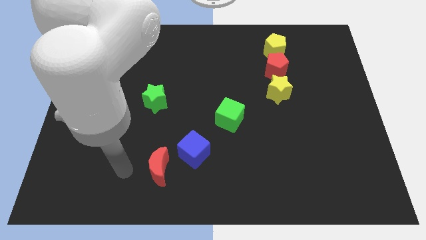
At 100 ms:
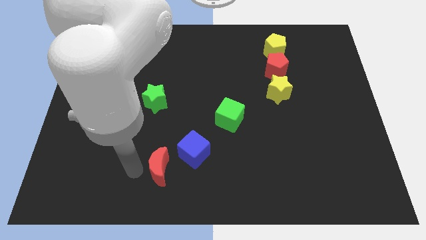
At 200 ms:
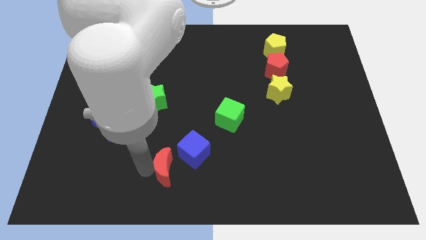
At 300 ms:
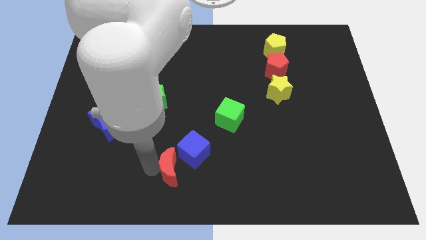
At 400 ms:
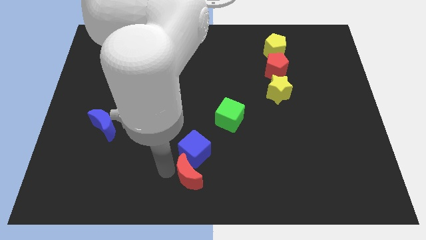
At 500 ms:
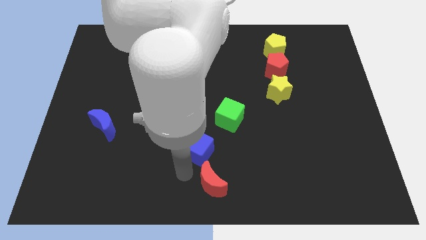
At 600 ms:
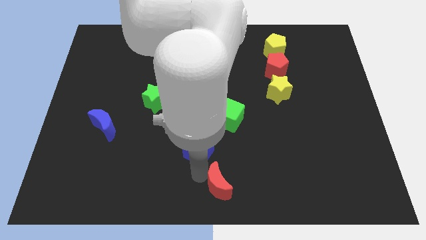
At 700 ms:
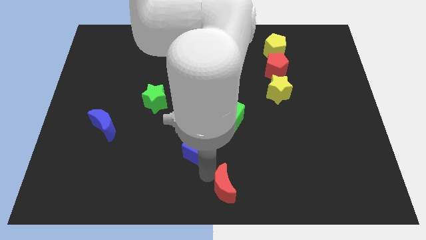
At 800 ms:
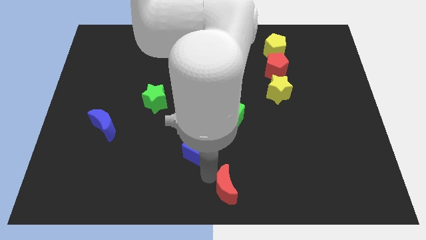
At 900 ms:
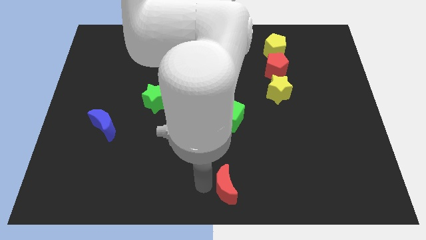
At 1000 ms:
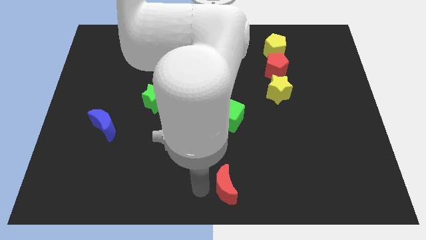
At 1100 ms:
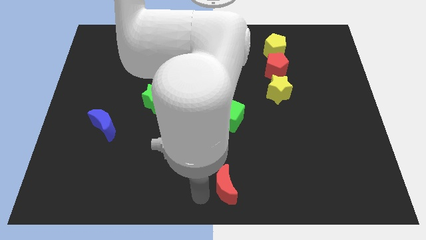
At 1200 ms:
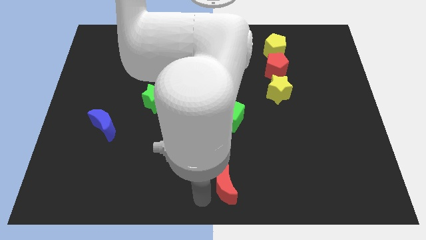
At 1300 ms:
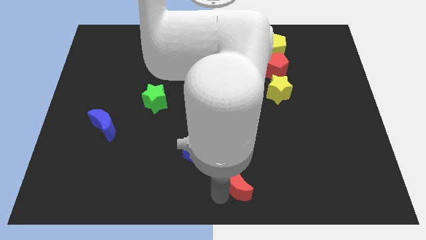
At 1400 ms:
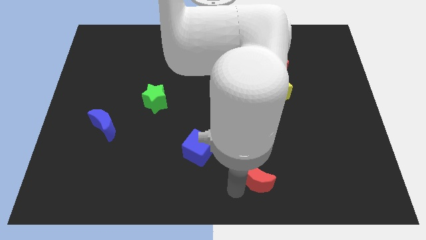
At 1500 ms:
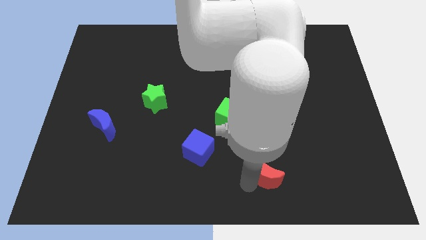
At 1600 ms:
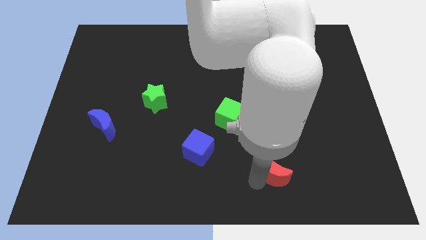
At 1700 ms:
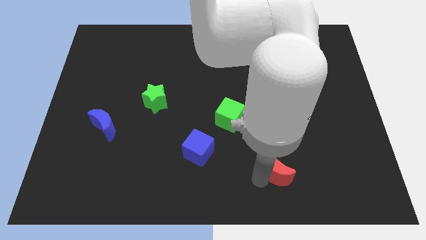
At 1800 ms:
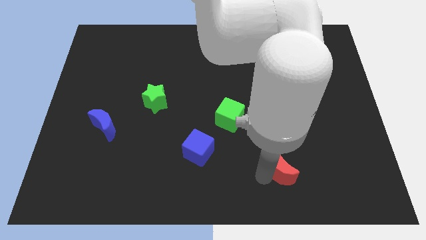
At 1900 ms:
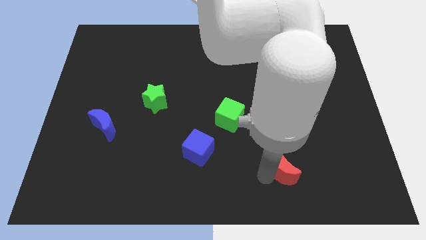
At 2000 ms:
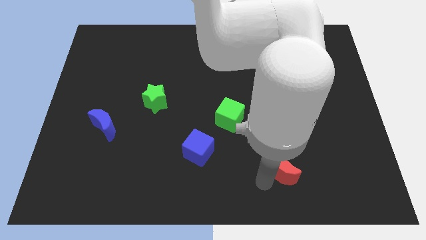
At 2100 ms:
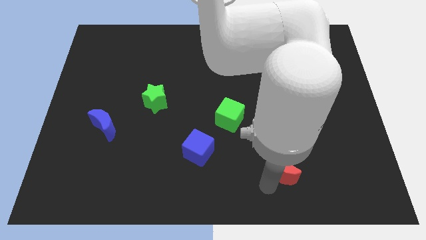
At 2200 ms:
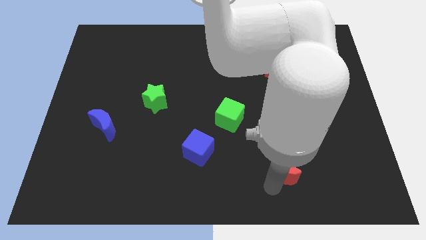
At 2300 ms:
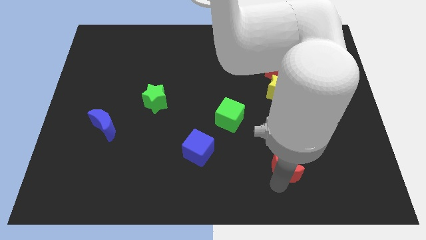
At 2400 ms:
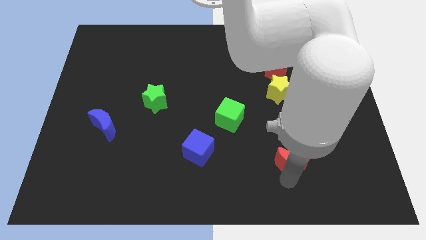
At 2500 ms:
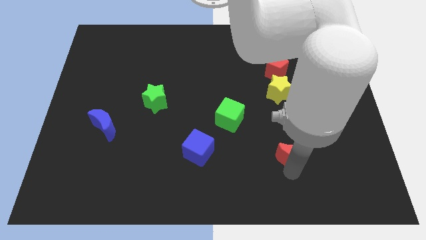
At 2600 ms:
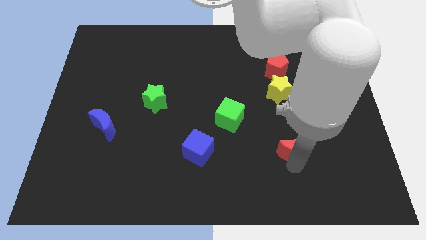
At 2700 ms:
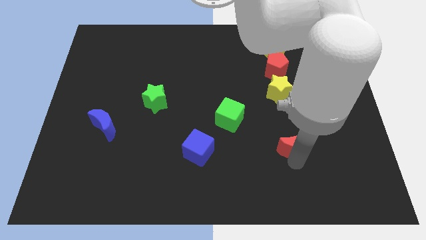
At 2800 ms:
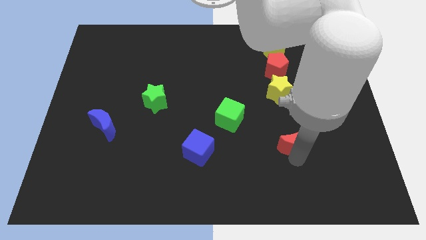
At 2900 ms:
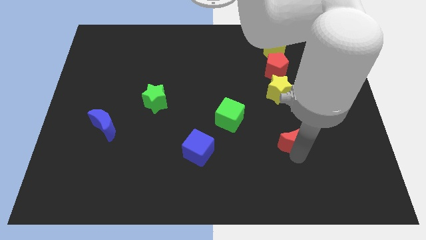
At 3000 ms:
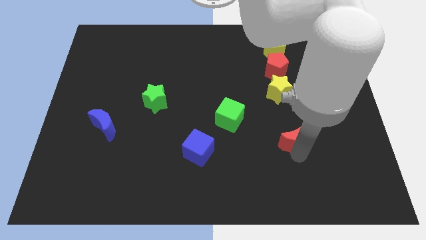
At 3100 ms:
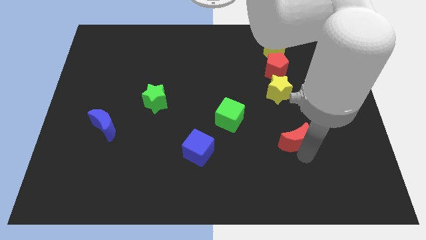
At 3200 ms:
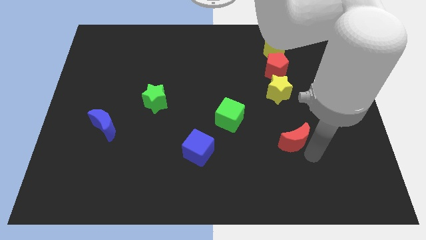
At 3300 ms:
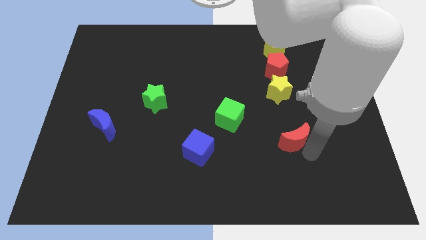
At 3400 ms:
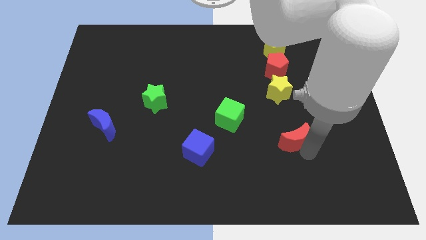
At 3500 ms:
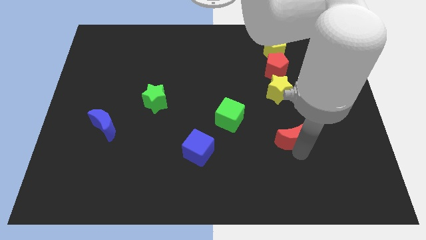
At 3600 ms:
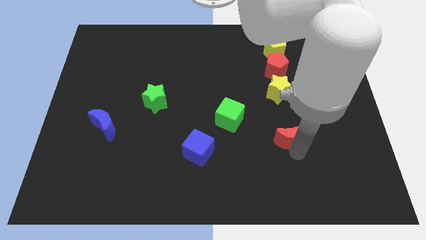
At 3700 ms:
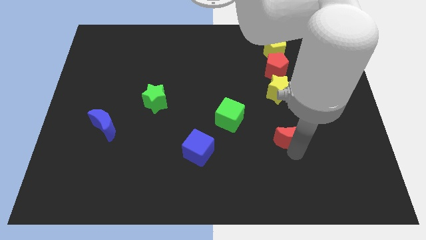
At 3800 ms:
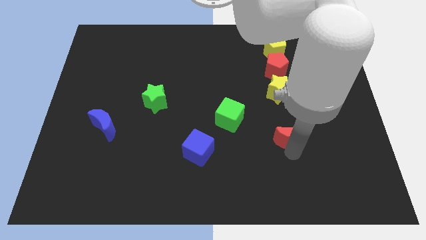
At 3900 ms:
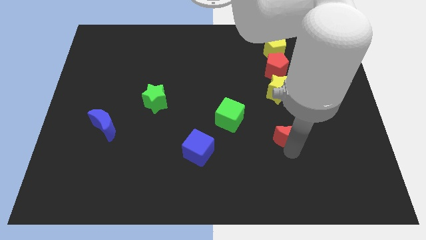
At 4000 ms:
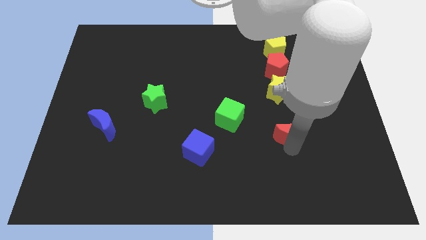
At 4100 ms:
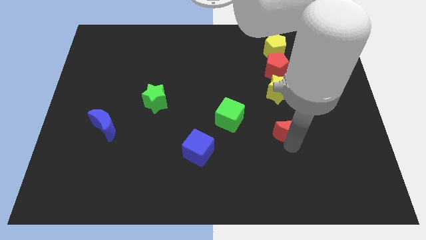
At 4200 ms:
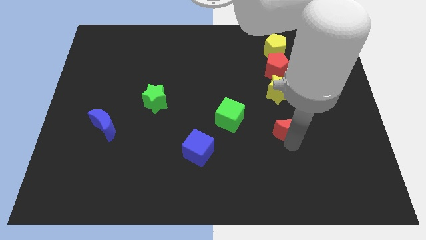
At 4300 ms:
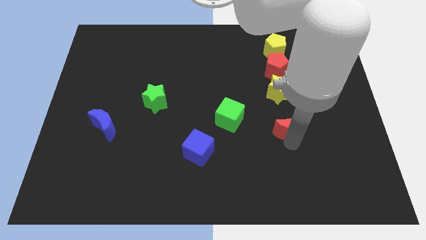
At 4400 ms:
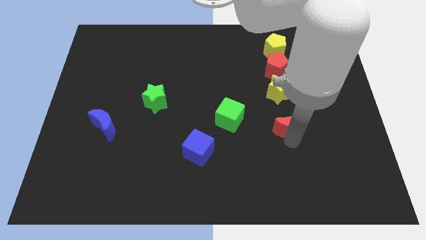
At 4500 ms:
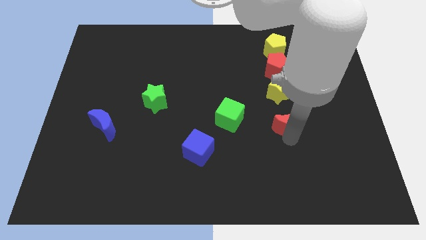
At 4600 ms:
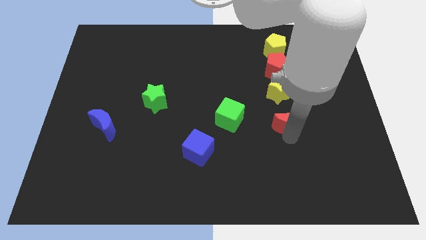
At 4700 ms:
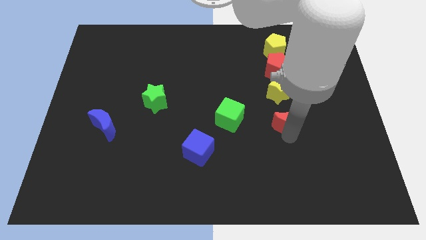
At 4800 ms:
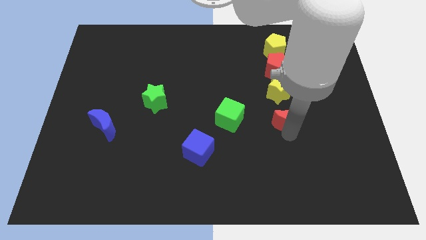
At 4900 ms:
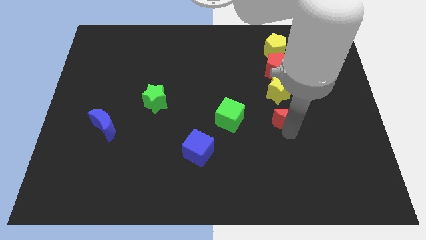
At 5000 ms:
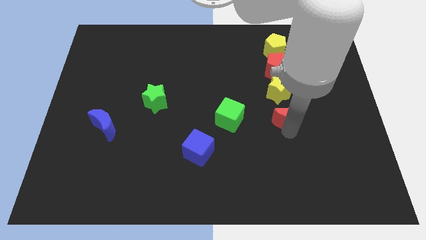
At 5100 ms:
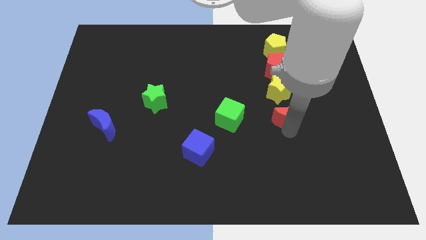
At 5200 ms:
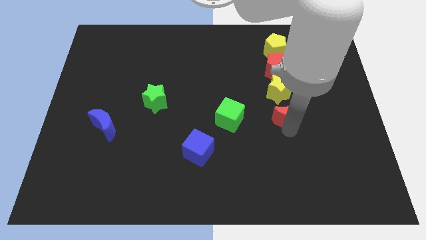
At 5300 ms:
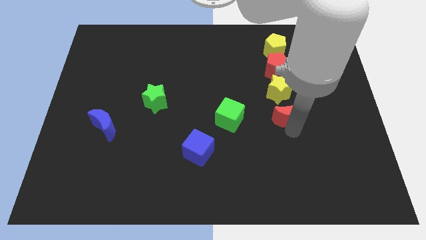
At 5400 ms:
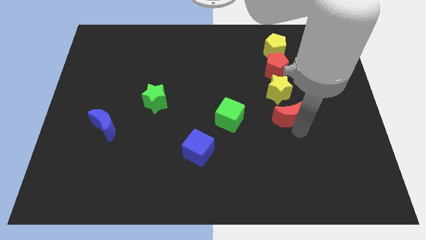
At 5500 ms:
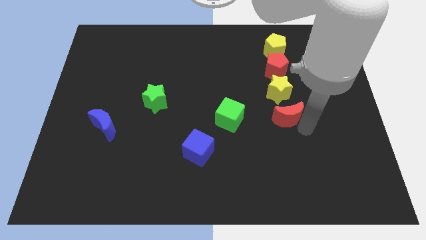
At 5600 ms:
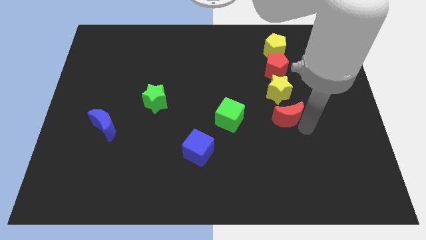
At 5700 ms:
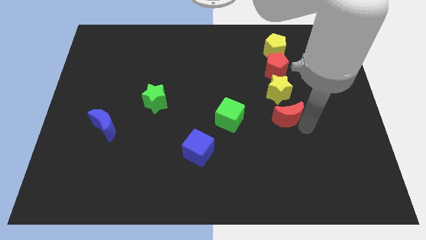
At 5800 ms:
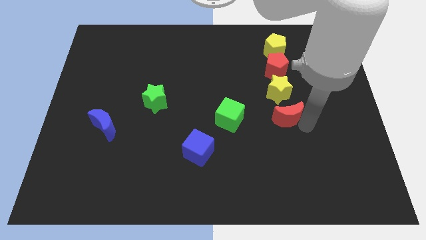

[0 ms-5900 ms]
move the red moon to the bottom of yellow star

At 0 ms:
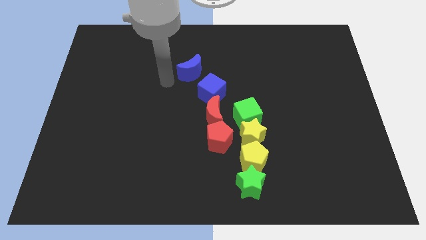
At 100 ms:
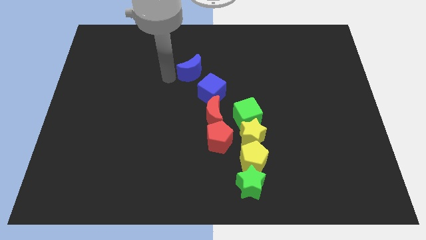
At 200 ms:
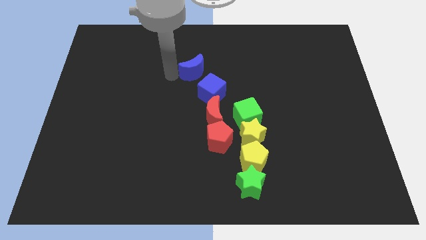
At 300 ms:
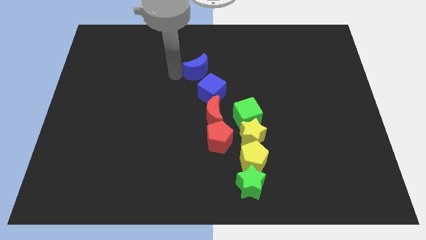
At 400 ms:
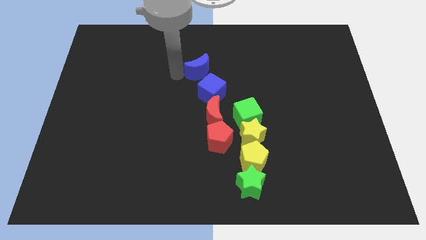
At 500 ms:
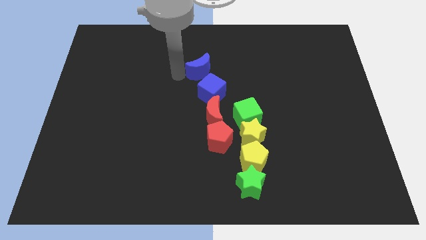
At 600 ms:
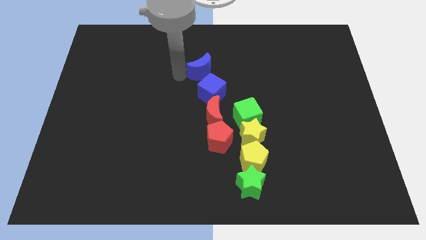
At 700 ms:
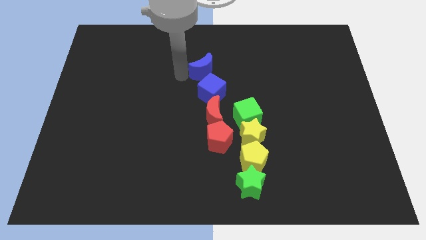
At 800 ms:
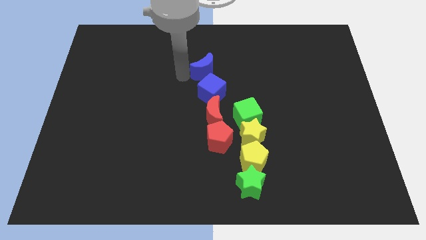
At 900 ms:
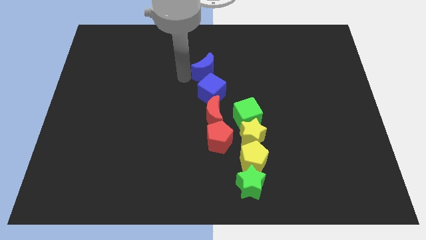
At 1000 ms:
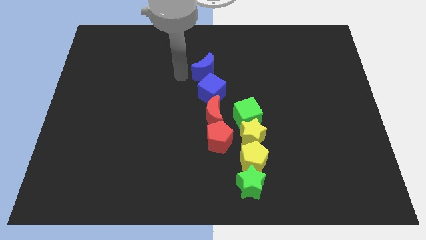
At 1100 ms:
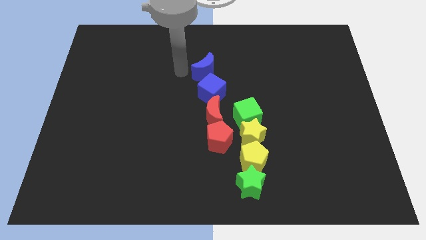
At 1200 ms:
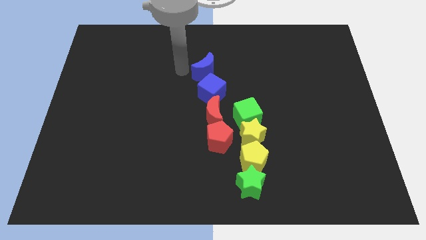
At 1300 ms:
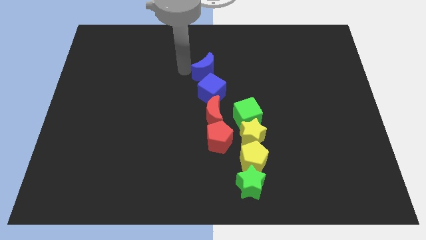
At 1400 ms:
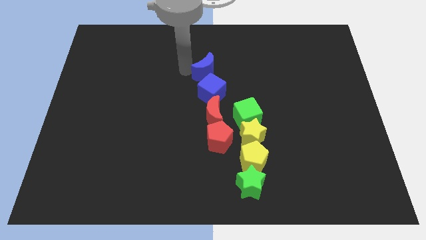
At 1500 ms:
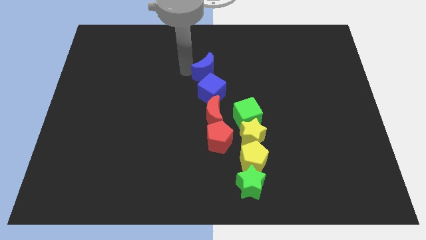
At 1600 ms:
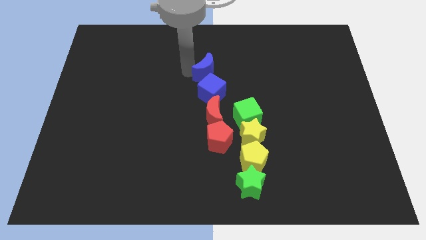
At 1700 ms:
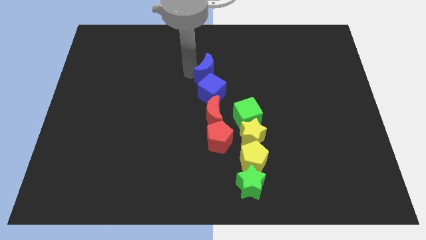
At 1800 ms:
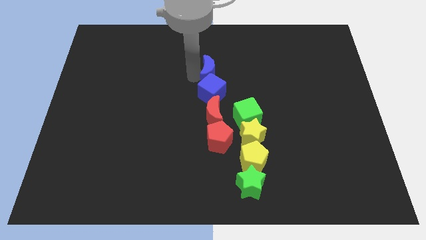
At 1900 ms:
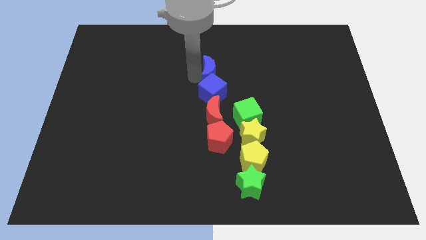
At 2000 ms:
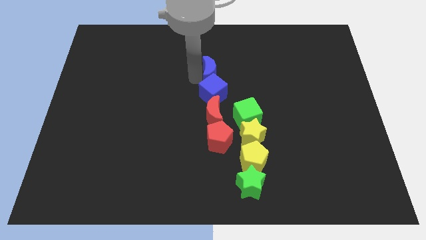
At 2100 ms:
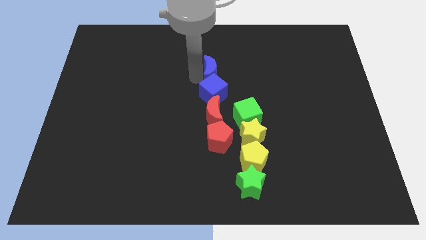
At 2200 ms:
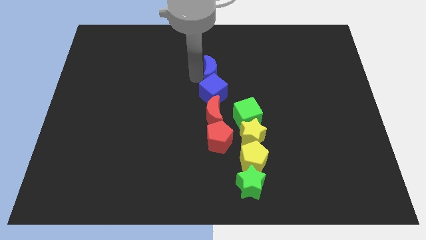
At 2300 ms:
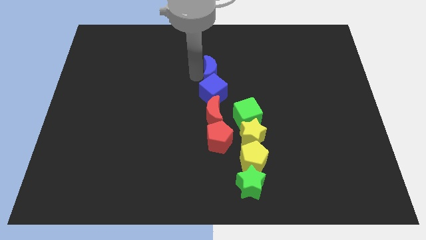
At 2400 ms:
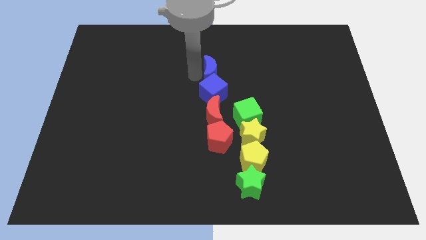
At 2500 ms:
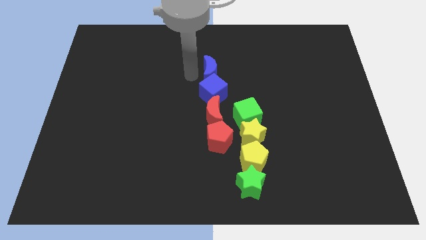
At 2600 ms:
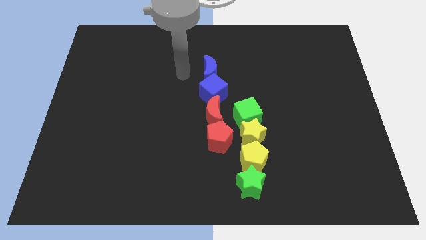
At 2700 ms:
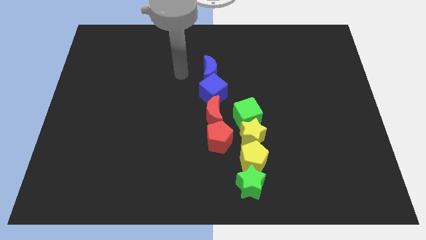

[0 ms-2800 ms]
place blue crescent above blue cube

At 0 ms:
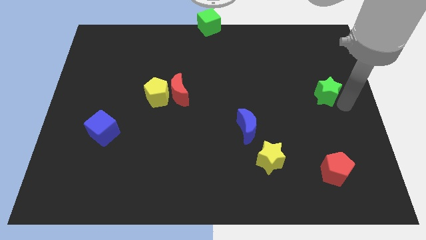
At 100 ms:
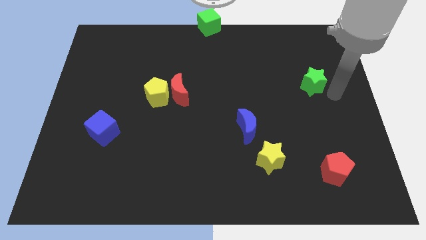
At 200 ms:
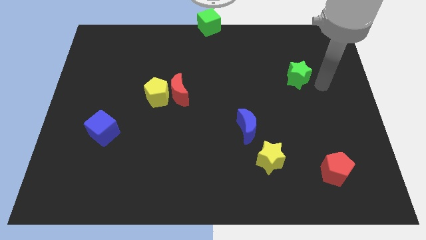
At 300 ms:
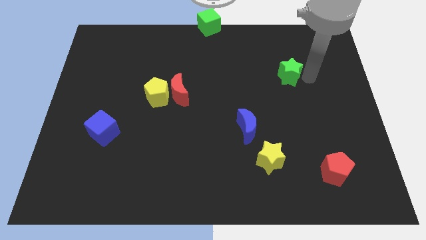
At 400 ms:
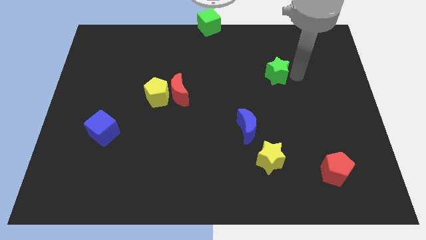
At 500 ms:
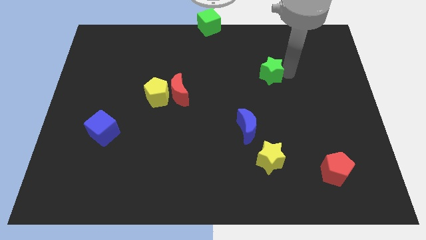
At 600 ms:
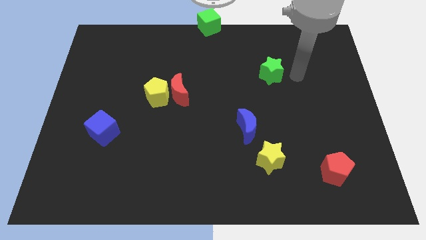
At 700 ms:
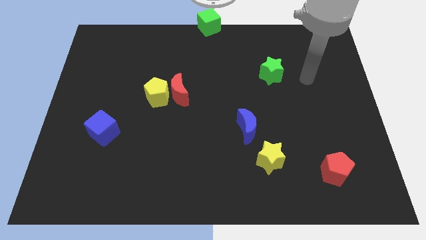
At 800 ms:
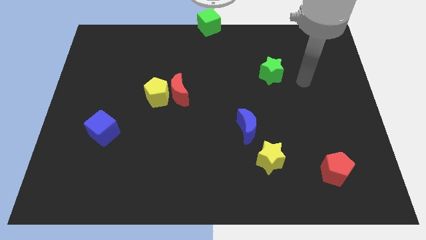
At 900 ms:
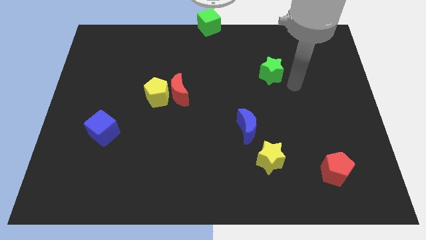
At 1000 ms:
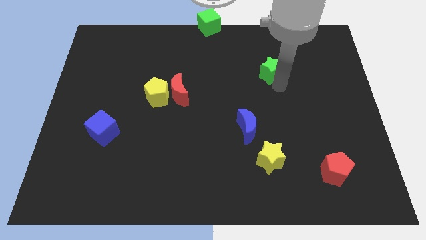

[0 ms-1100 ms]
slightly push the green star upward
